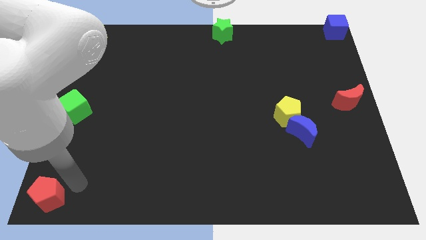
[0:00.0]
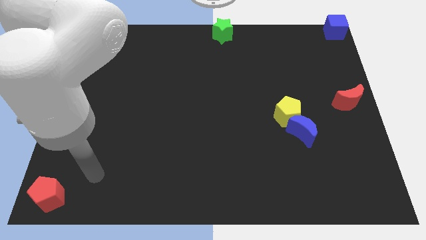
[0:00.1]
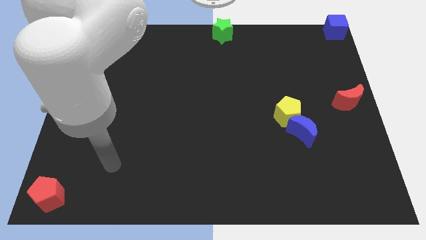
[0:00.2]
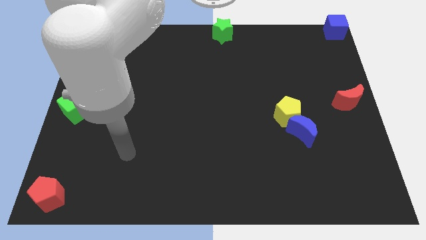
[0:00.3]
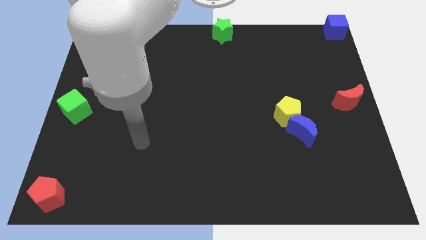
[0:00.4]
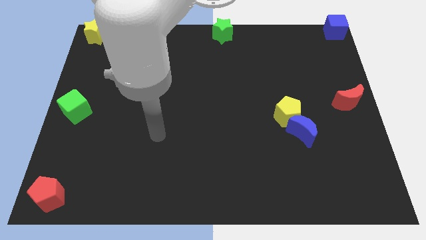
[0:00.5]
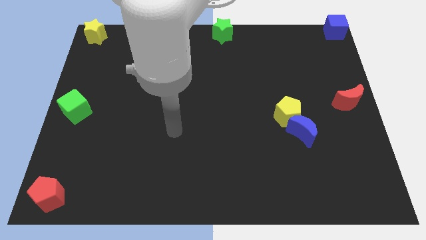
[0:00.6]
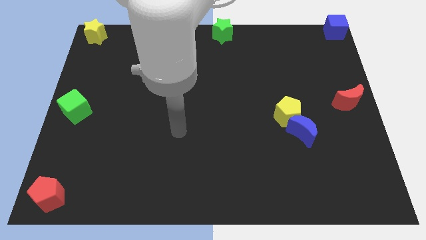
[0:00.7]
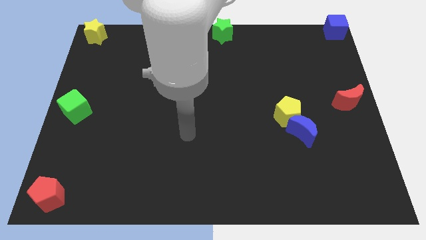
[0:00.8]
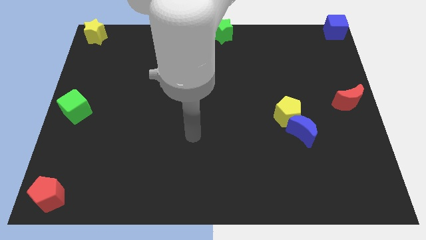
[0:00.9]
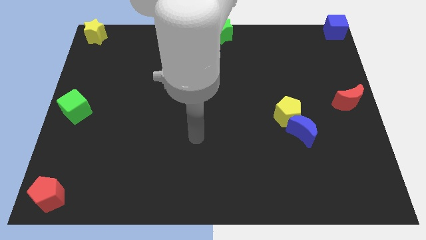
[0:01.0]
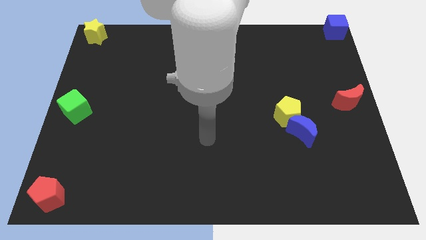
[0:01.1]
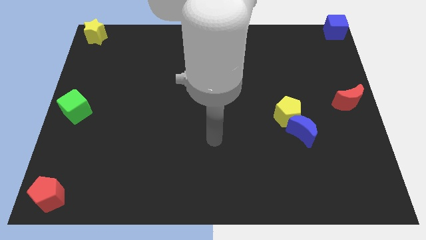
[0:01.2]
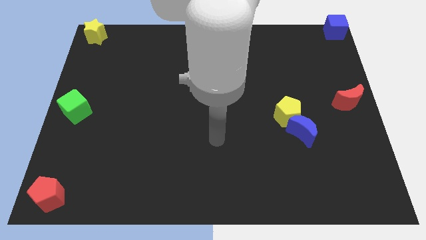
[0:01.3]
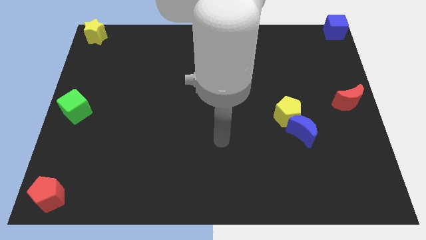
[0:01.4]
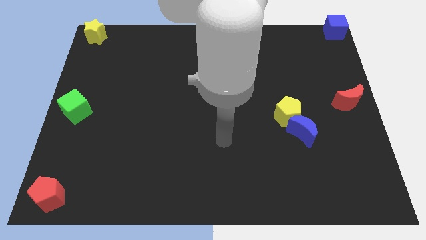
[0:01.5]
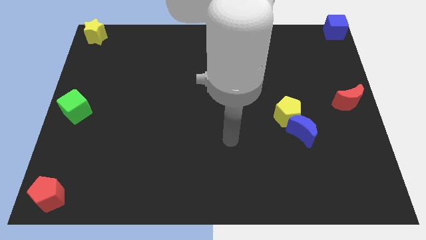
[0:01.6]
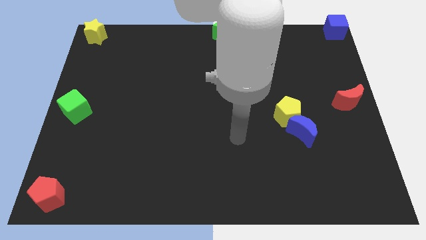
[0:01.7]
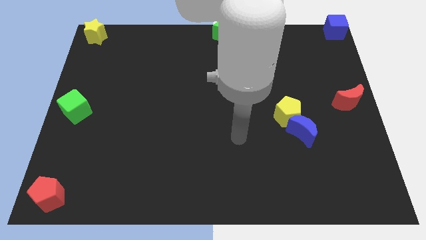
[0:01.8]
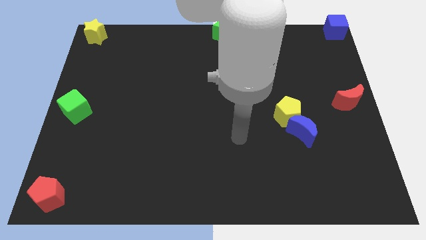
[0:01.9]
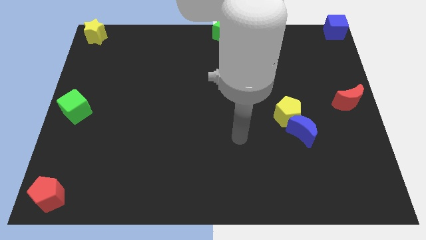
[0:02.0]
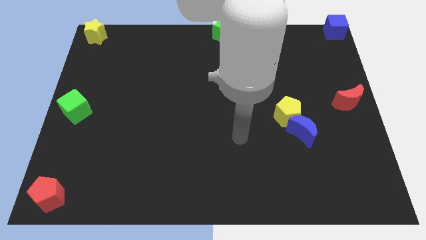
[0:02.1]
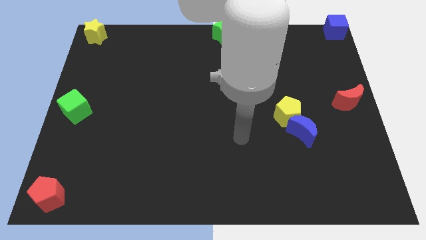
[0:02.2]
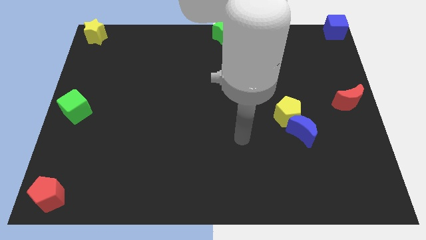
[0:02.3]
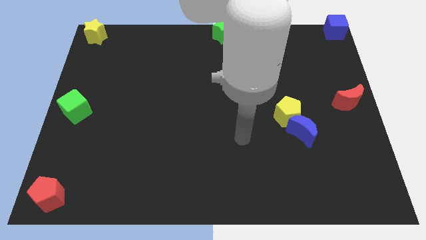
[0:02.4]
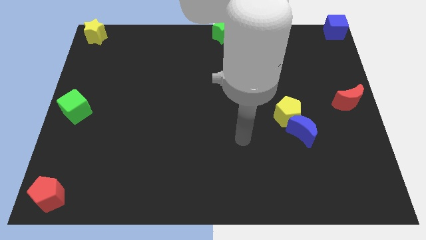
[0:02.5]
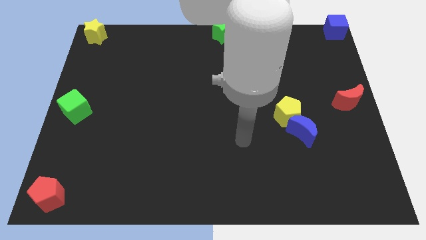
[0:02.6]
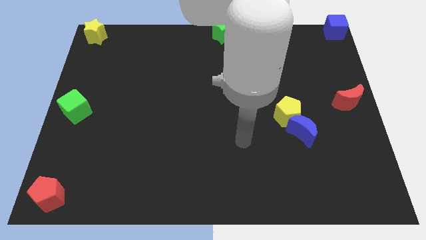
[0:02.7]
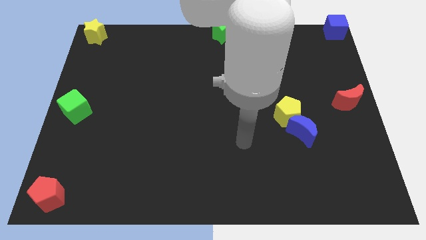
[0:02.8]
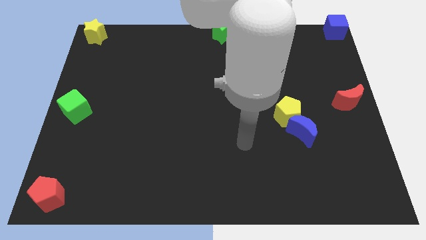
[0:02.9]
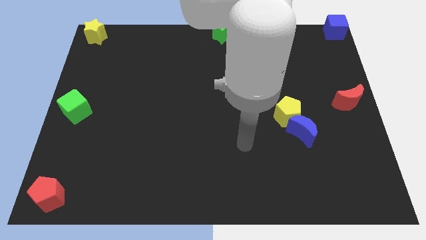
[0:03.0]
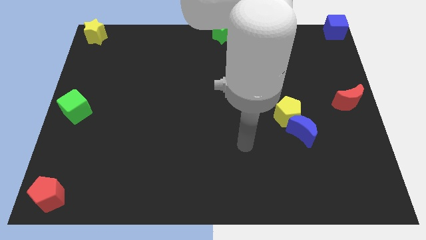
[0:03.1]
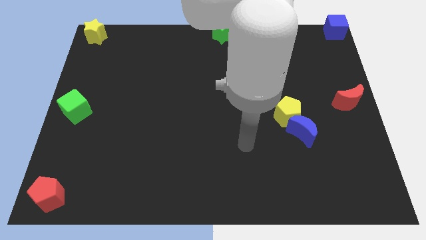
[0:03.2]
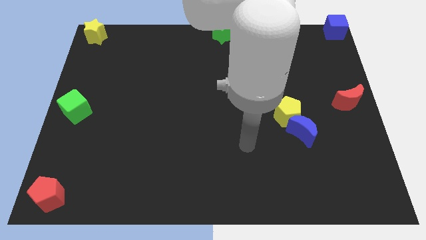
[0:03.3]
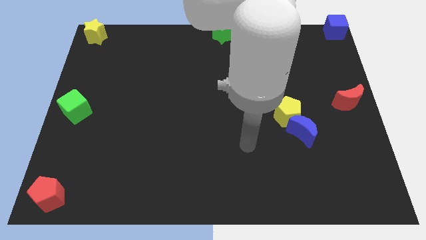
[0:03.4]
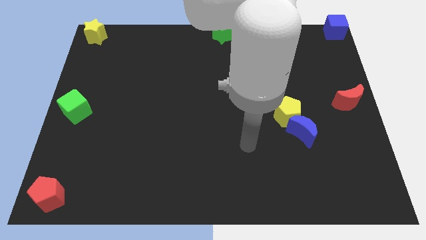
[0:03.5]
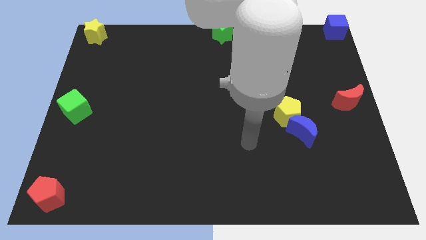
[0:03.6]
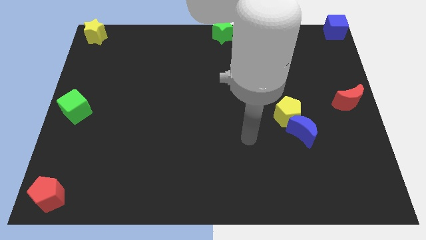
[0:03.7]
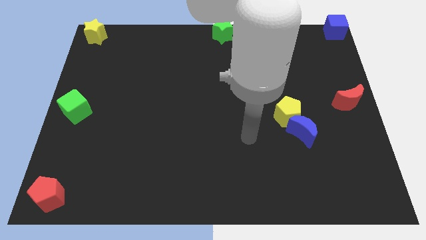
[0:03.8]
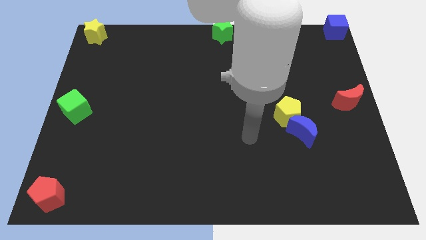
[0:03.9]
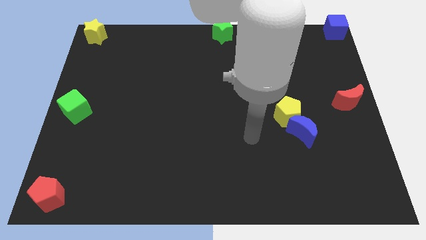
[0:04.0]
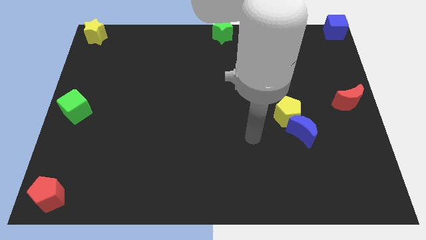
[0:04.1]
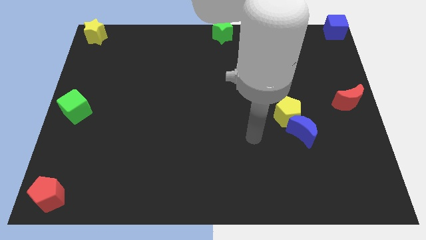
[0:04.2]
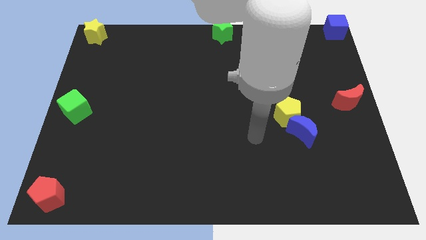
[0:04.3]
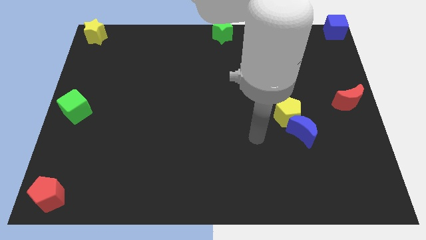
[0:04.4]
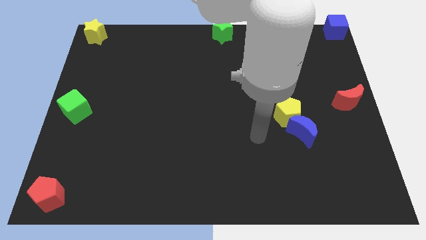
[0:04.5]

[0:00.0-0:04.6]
move the arm away from the red pentagon

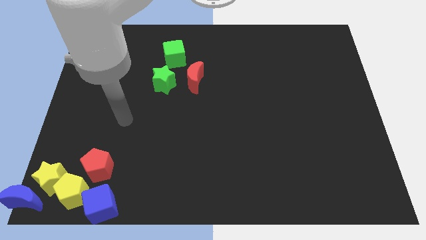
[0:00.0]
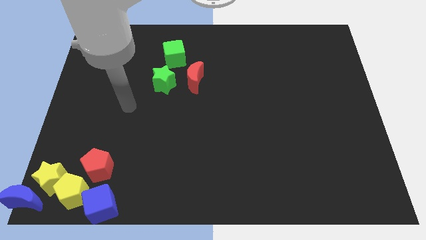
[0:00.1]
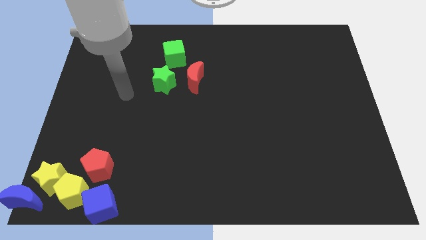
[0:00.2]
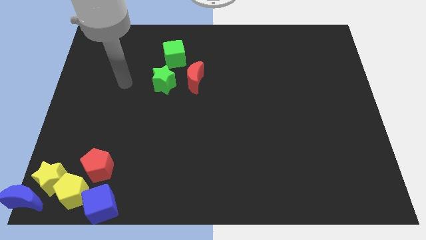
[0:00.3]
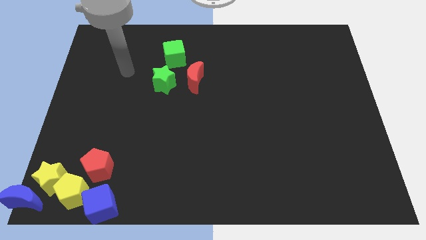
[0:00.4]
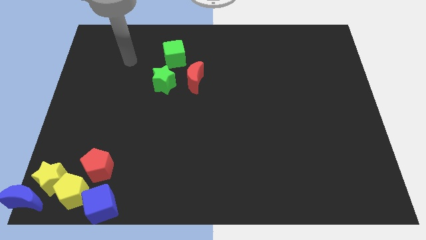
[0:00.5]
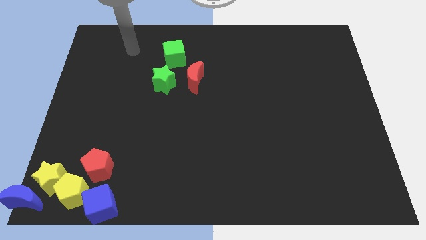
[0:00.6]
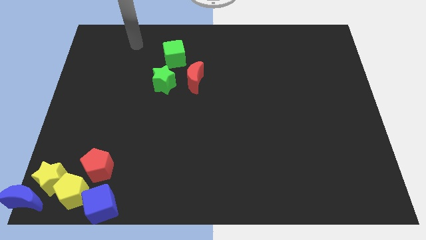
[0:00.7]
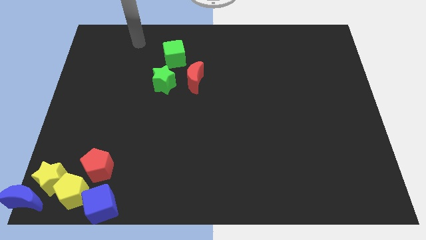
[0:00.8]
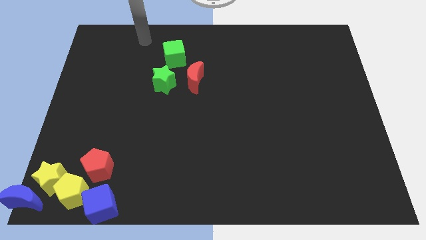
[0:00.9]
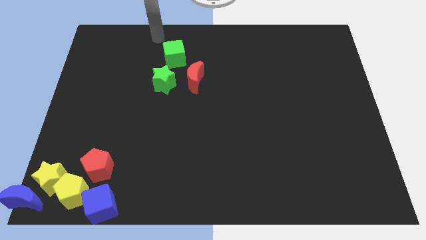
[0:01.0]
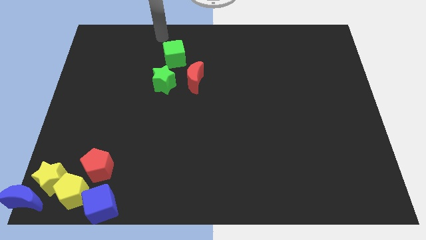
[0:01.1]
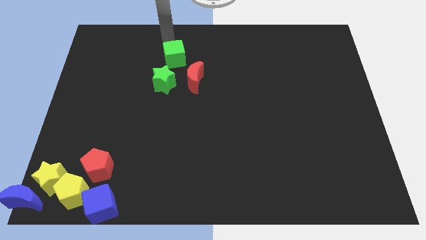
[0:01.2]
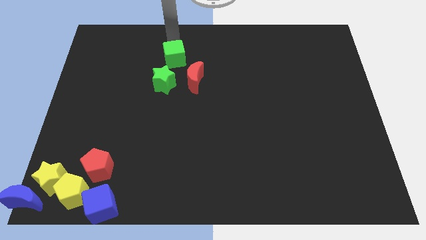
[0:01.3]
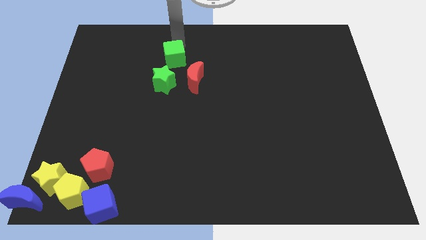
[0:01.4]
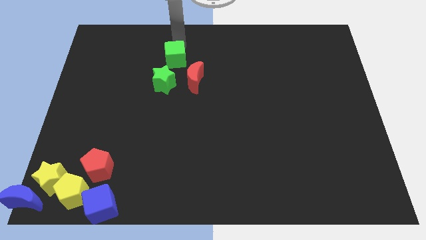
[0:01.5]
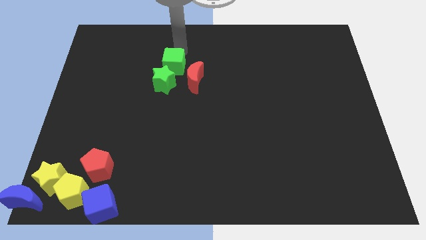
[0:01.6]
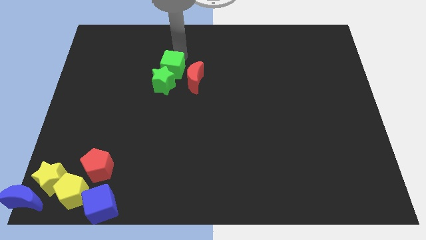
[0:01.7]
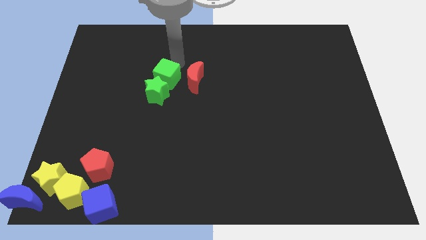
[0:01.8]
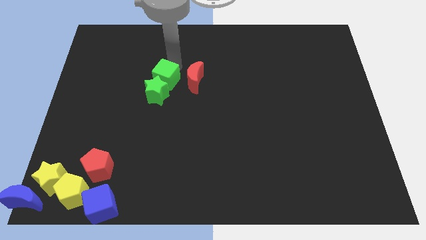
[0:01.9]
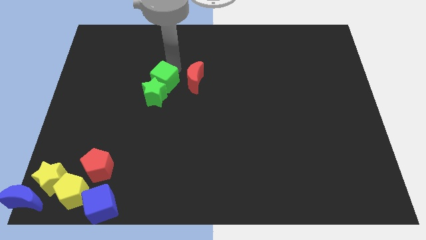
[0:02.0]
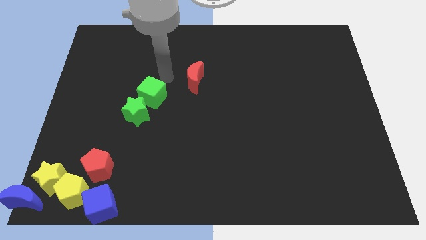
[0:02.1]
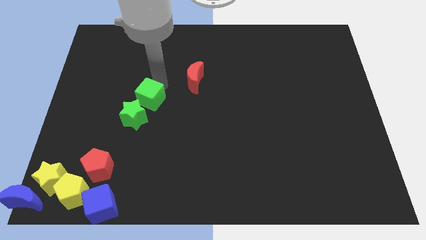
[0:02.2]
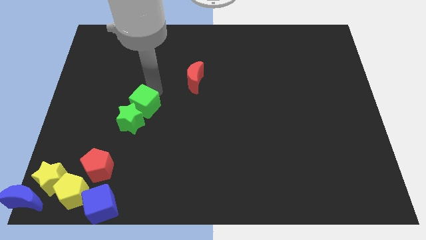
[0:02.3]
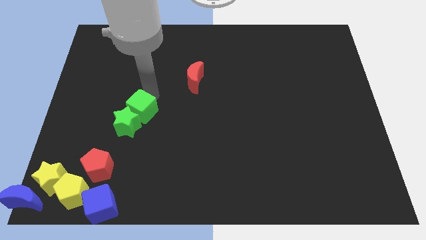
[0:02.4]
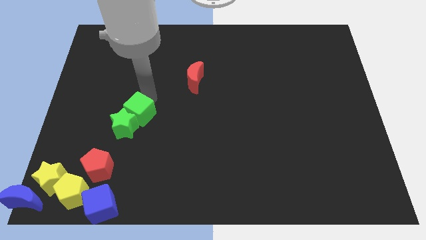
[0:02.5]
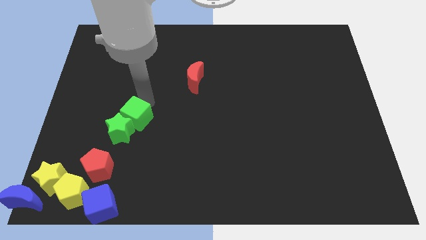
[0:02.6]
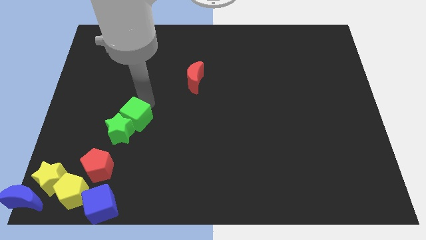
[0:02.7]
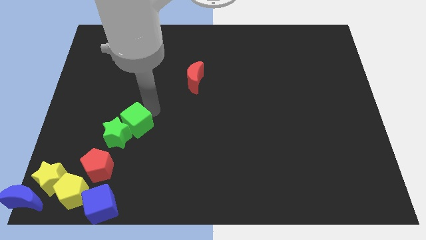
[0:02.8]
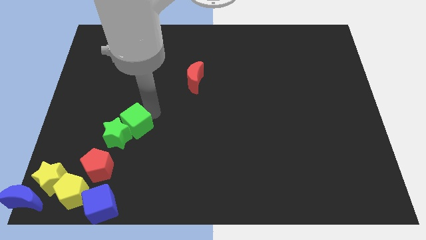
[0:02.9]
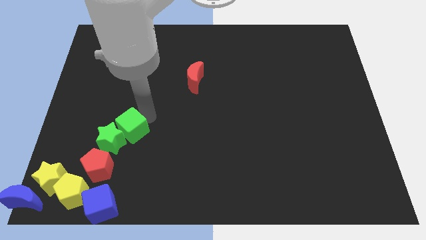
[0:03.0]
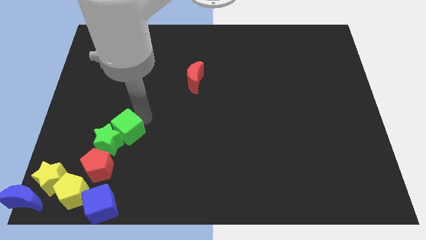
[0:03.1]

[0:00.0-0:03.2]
push the green star with green cube towards the top of the red pentagon

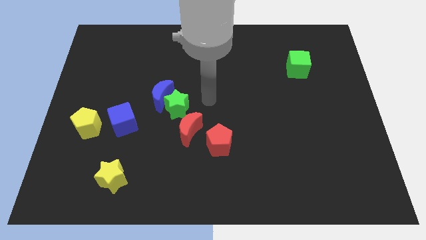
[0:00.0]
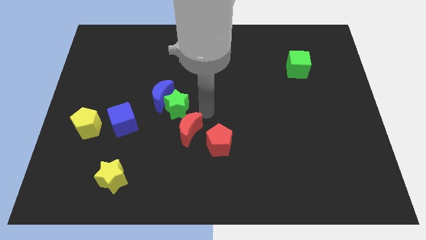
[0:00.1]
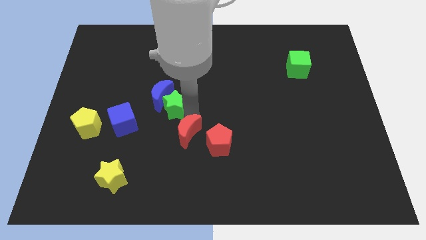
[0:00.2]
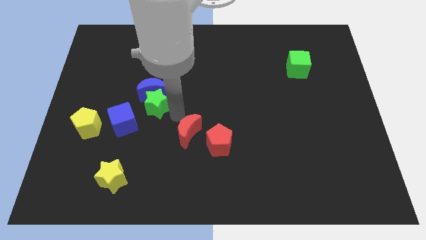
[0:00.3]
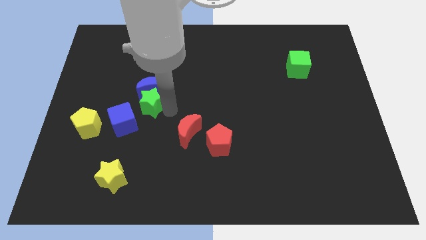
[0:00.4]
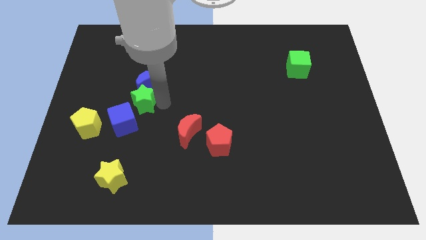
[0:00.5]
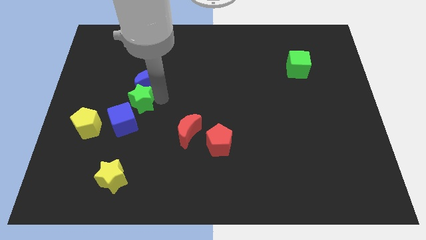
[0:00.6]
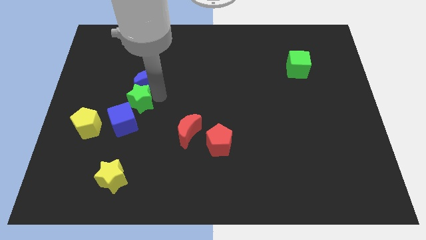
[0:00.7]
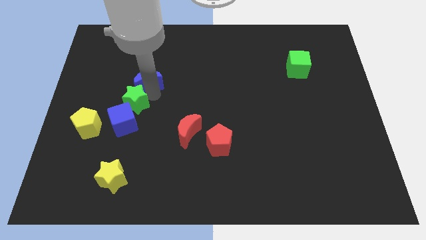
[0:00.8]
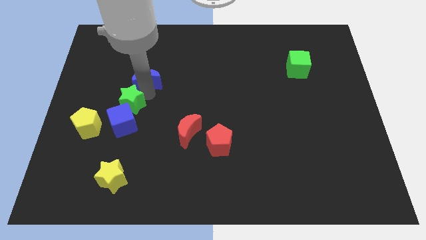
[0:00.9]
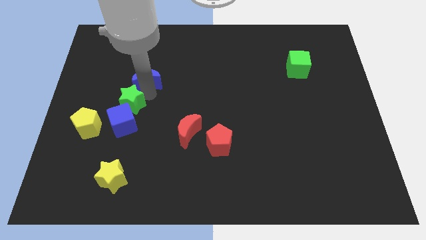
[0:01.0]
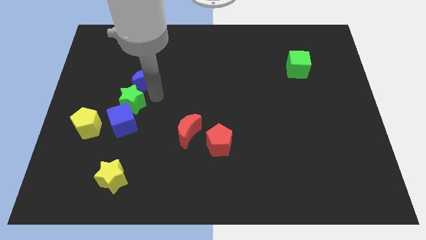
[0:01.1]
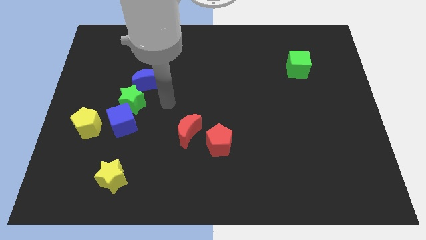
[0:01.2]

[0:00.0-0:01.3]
push the green star into the top side of the blue cube
